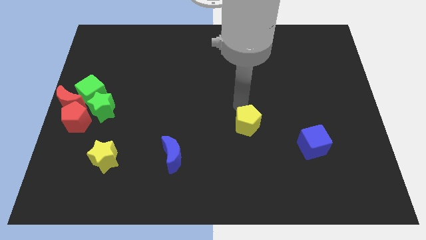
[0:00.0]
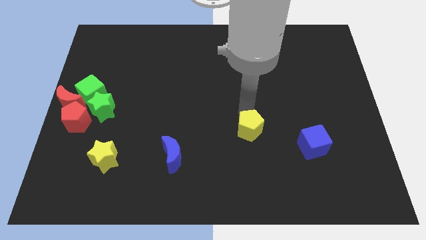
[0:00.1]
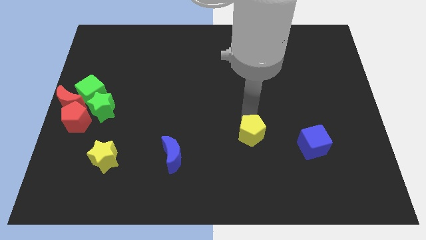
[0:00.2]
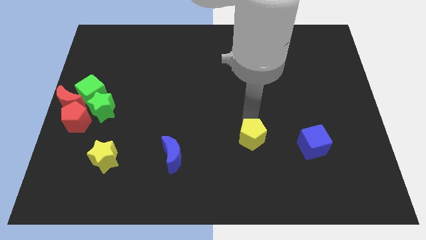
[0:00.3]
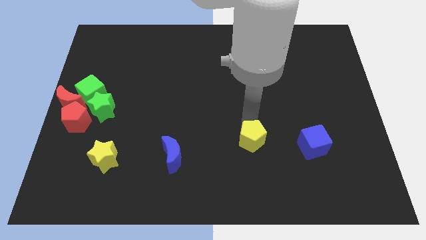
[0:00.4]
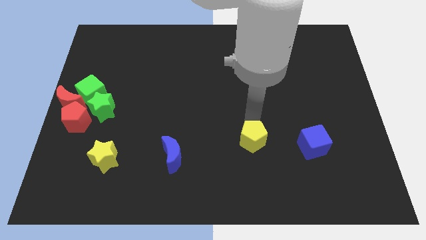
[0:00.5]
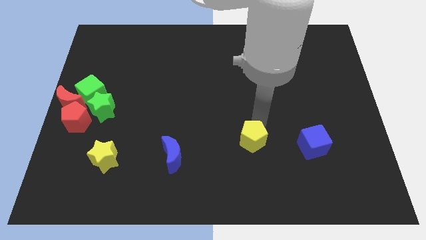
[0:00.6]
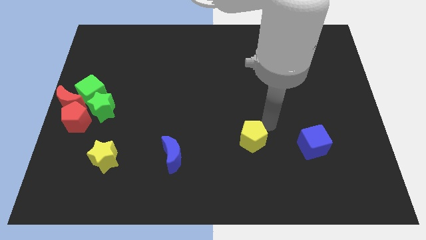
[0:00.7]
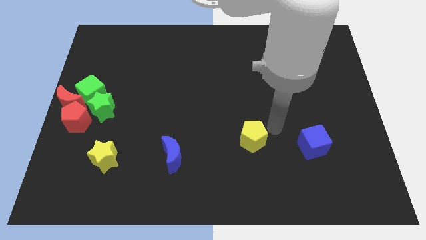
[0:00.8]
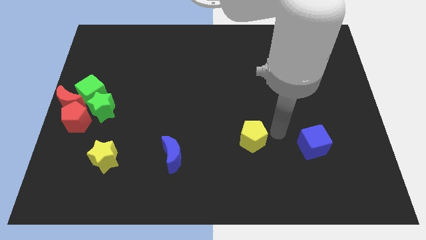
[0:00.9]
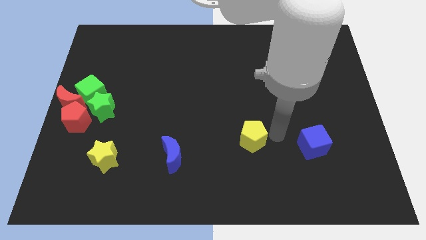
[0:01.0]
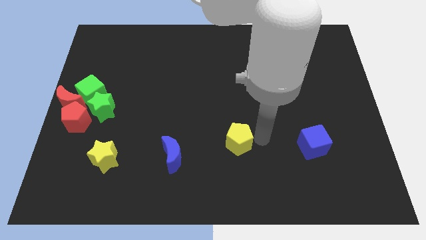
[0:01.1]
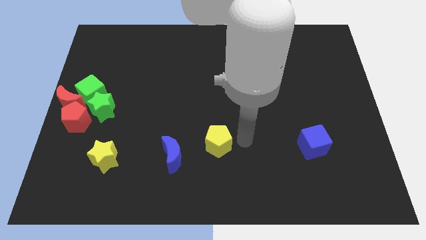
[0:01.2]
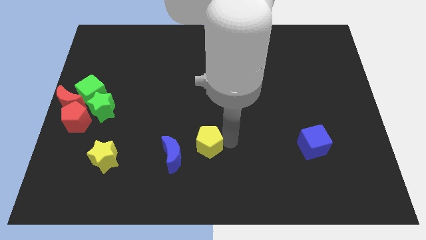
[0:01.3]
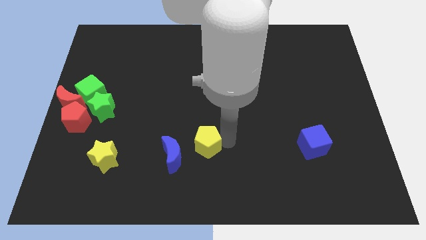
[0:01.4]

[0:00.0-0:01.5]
move the yellow pentagon towards the blue moon

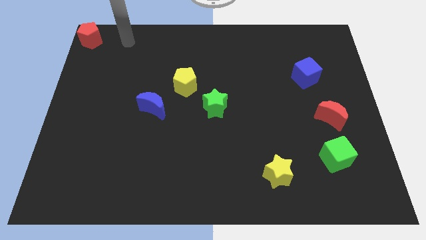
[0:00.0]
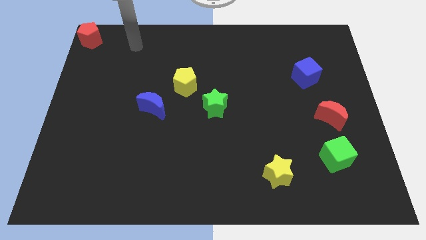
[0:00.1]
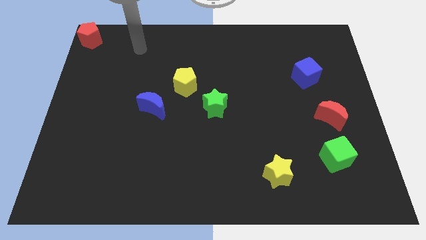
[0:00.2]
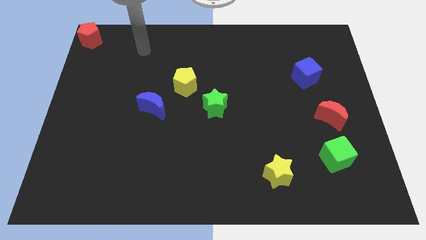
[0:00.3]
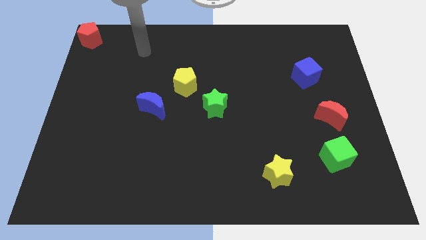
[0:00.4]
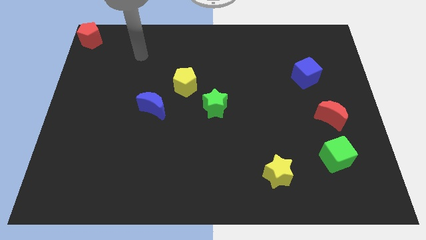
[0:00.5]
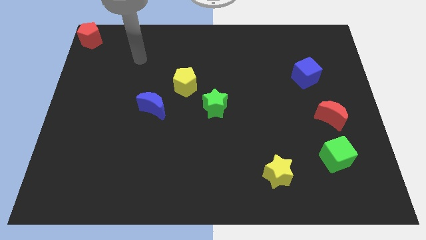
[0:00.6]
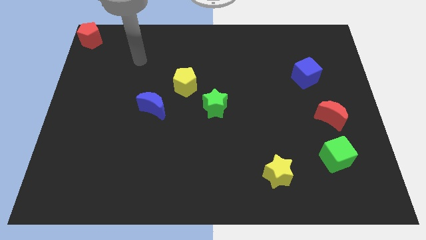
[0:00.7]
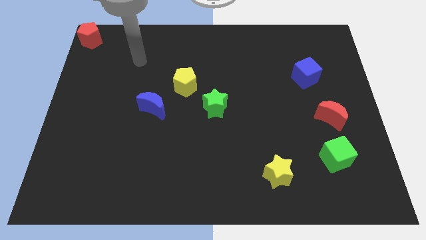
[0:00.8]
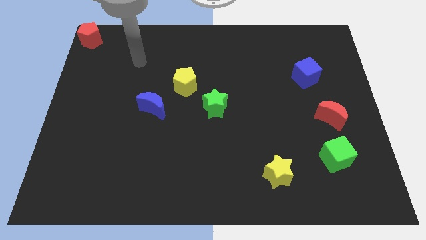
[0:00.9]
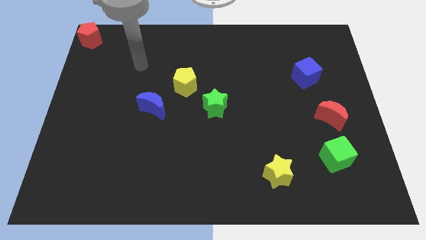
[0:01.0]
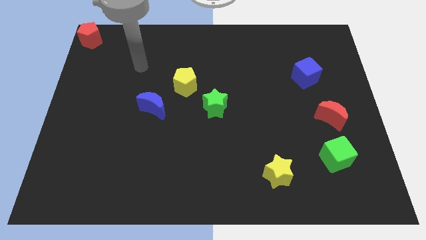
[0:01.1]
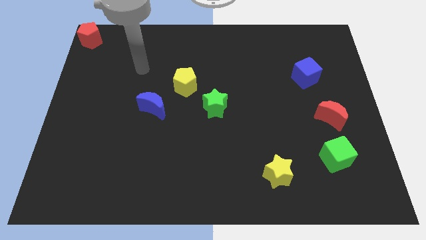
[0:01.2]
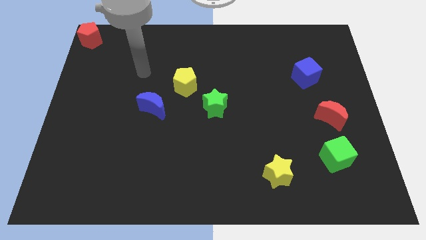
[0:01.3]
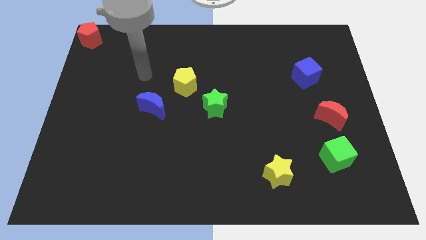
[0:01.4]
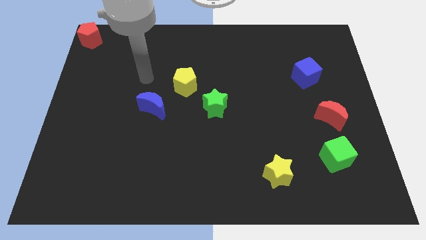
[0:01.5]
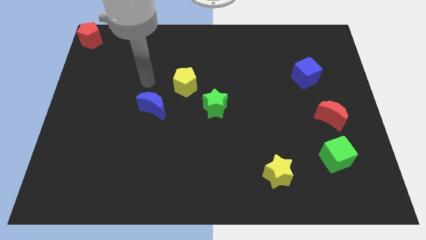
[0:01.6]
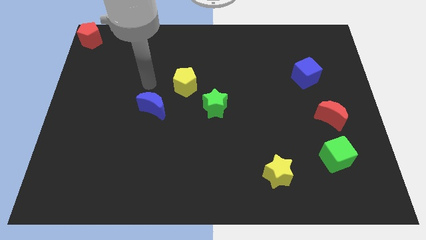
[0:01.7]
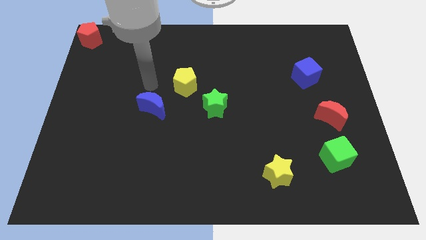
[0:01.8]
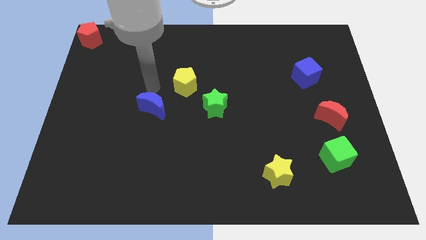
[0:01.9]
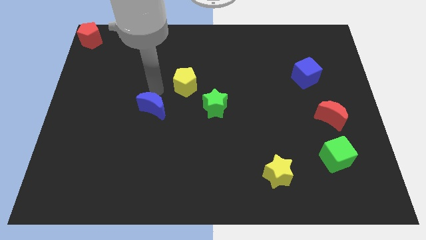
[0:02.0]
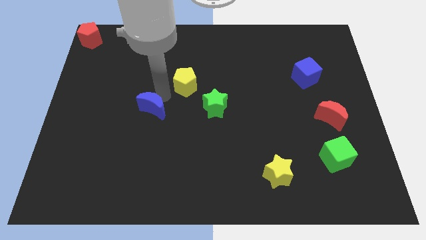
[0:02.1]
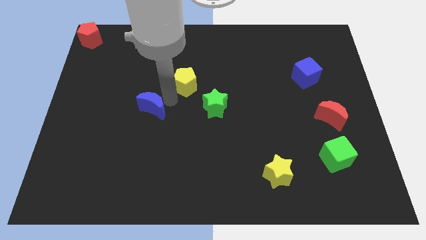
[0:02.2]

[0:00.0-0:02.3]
place your arm in between the yellow pentagon and the blue moon

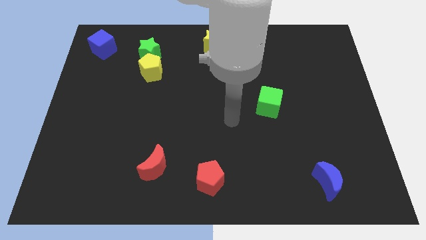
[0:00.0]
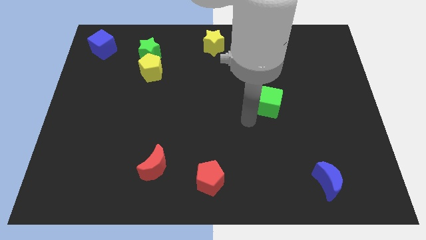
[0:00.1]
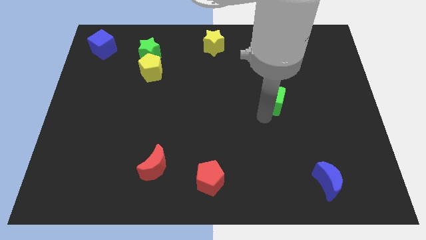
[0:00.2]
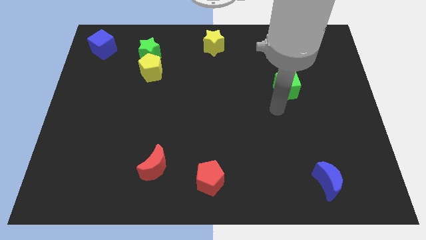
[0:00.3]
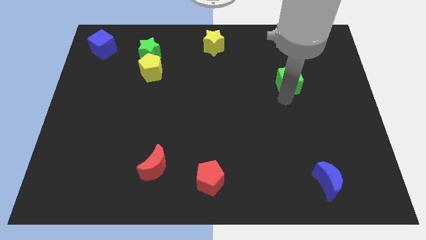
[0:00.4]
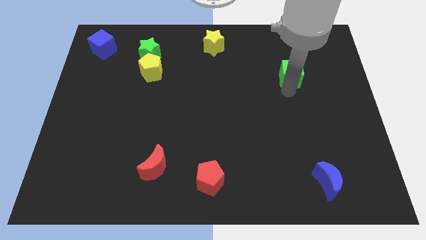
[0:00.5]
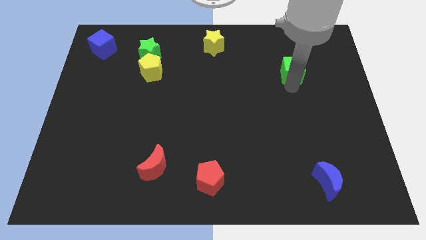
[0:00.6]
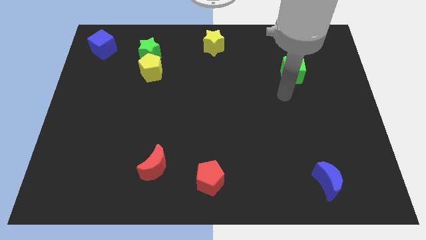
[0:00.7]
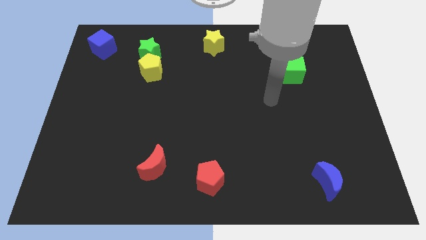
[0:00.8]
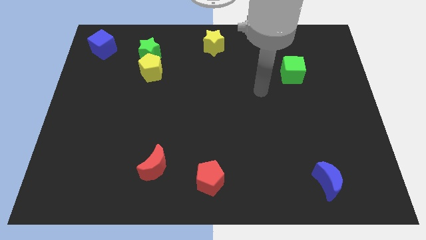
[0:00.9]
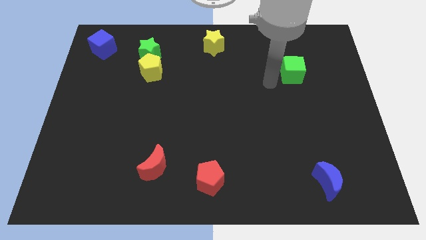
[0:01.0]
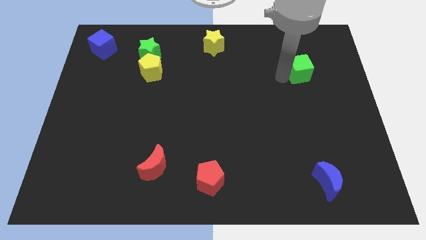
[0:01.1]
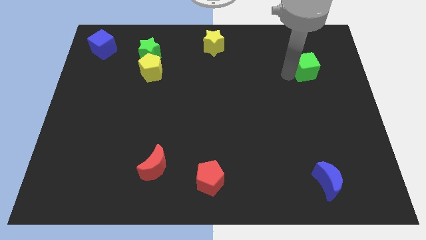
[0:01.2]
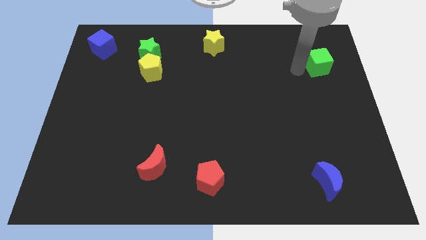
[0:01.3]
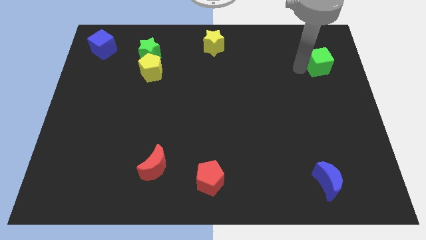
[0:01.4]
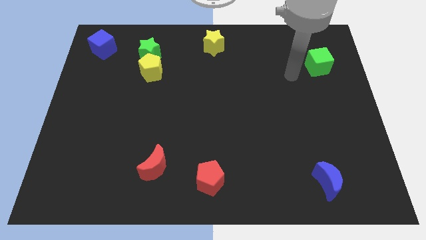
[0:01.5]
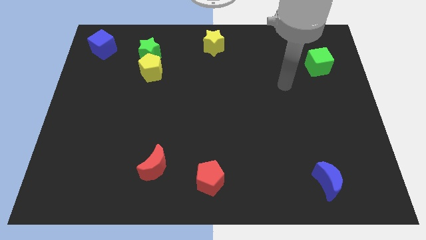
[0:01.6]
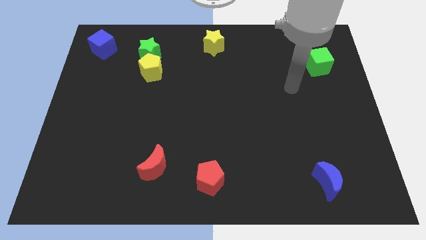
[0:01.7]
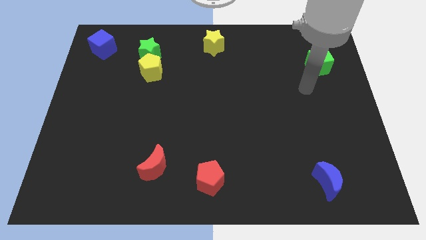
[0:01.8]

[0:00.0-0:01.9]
push the green cube towards the top right corner of the board

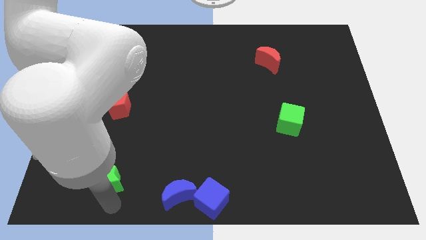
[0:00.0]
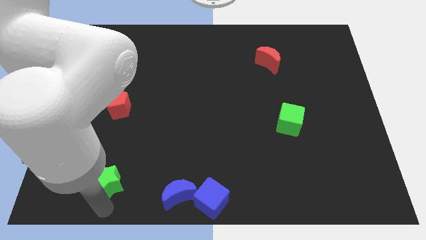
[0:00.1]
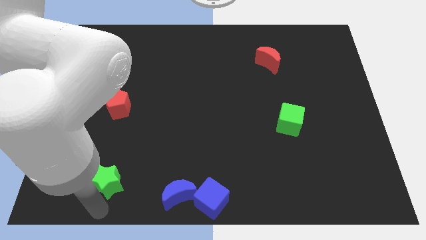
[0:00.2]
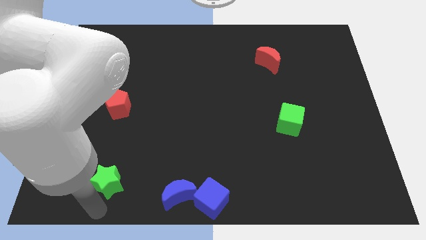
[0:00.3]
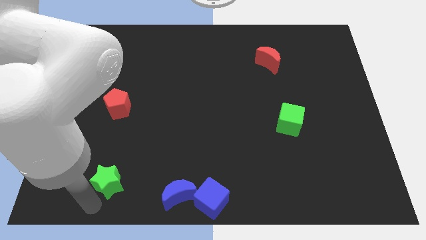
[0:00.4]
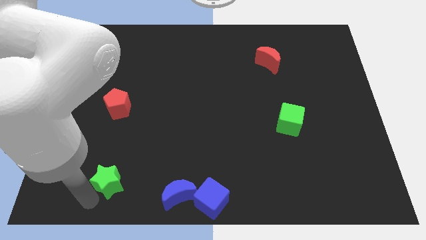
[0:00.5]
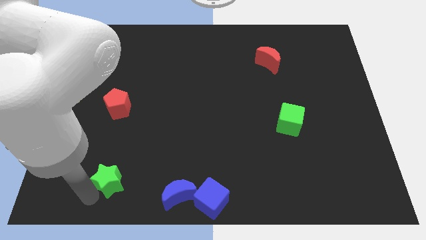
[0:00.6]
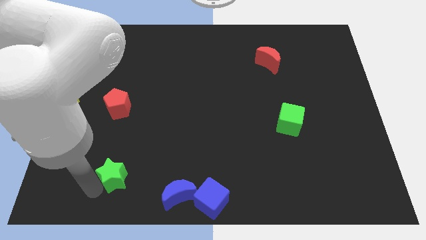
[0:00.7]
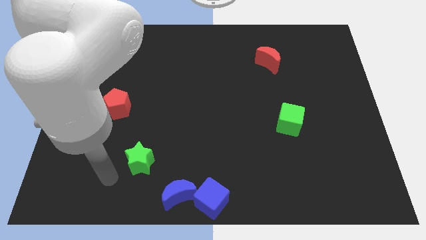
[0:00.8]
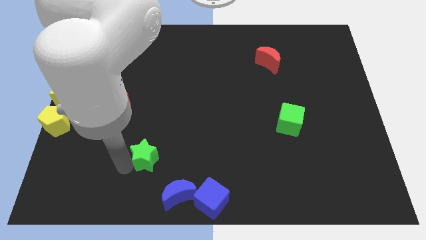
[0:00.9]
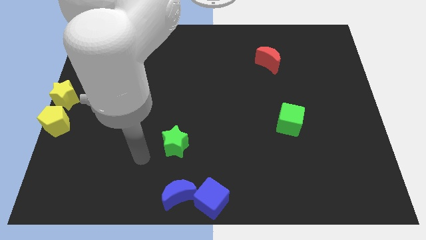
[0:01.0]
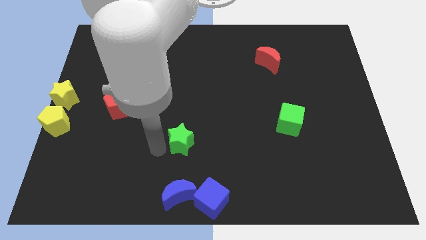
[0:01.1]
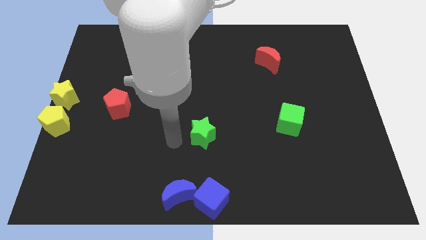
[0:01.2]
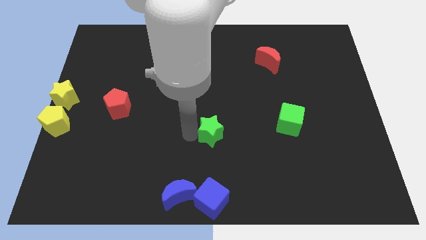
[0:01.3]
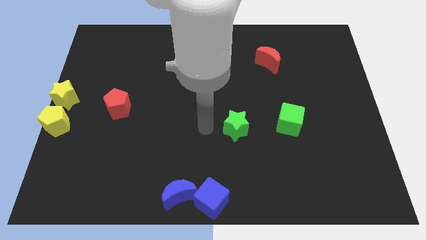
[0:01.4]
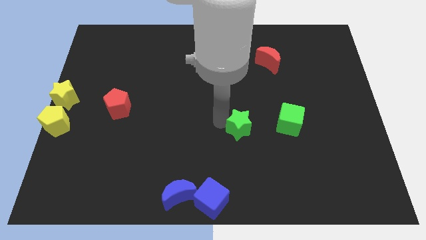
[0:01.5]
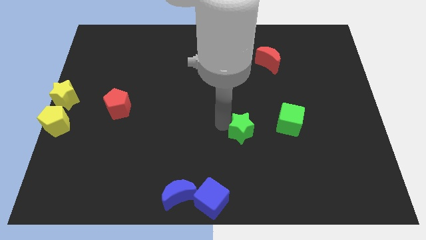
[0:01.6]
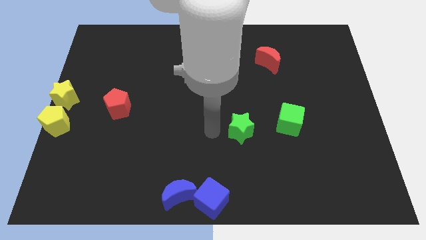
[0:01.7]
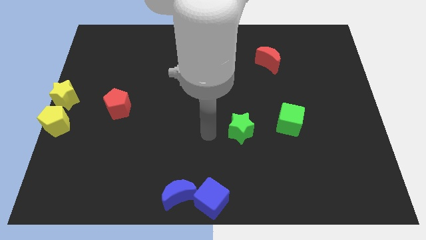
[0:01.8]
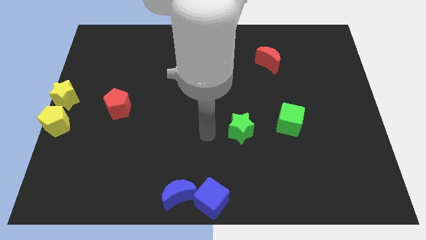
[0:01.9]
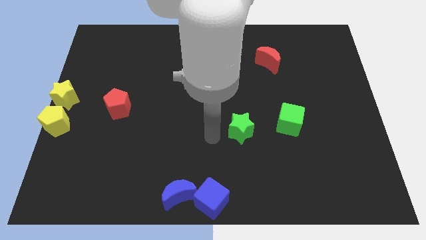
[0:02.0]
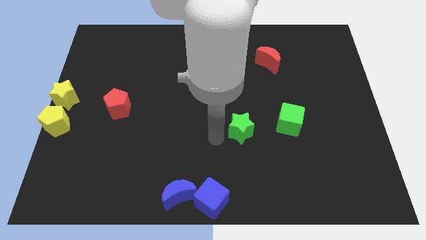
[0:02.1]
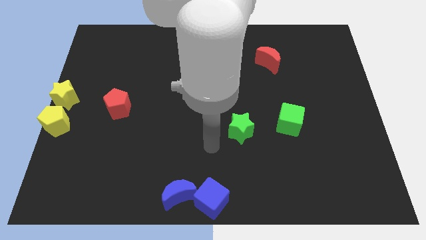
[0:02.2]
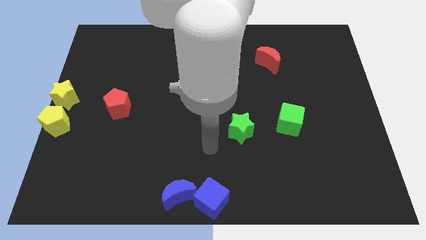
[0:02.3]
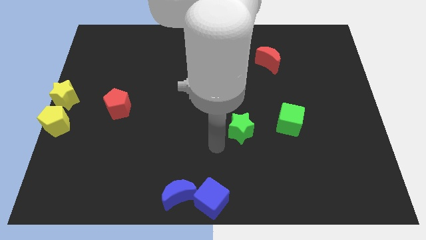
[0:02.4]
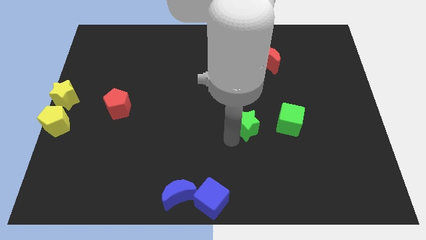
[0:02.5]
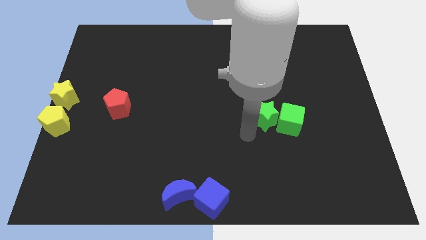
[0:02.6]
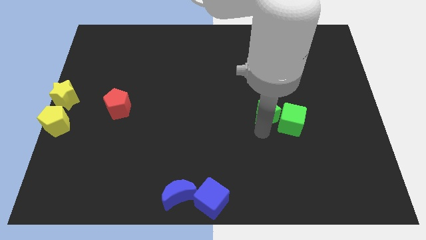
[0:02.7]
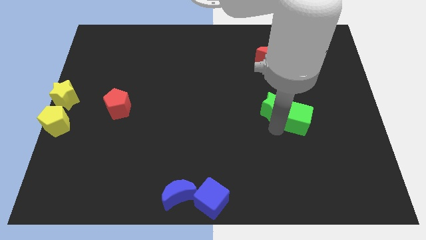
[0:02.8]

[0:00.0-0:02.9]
move the green star left to the green cube

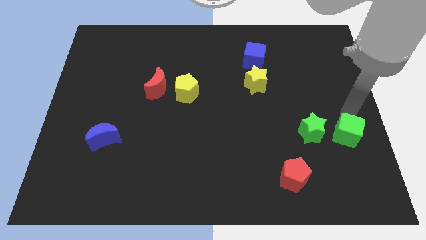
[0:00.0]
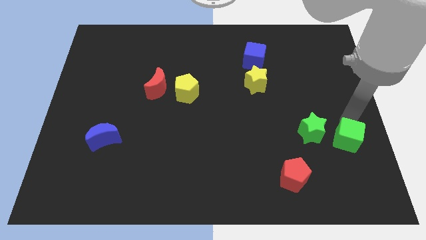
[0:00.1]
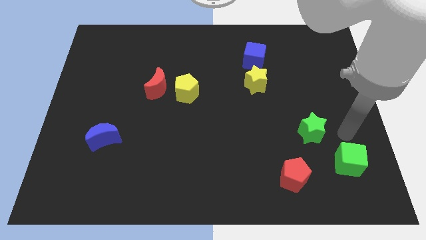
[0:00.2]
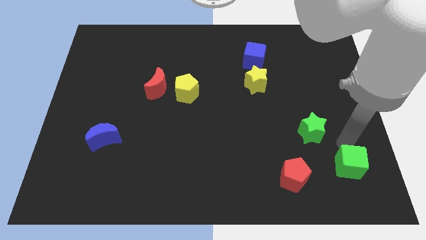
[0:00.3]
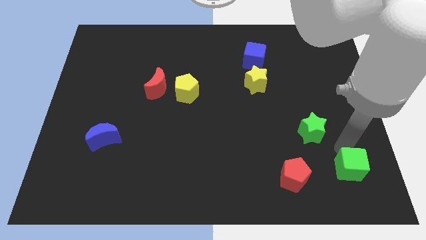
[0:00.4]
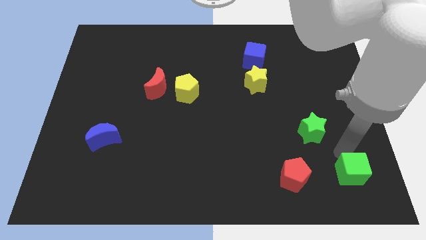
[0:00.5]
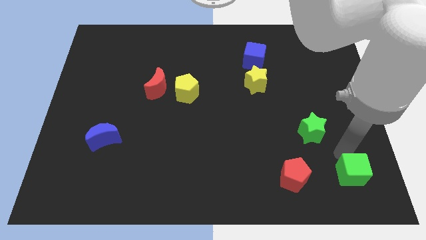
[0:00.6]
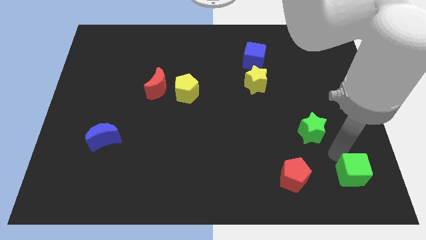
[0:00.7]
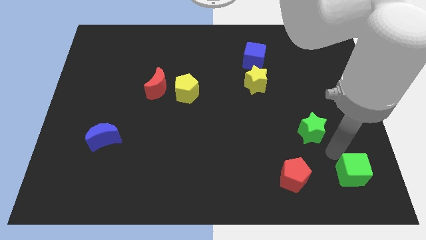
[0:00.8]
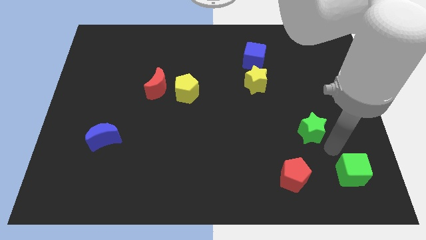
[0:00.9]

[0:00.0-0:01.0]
place green cube parallel to red pentagon
